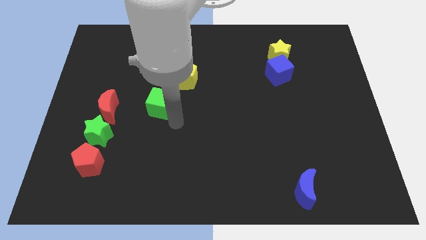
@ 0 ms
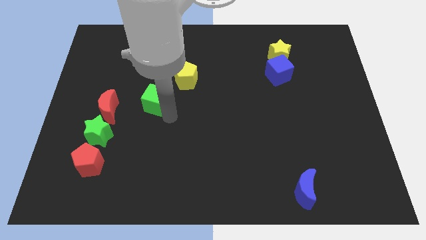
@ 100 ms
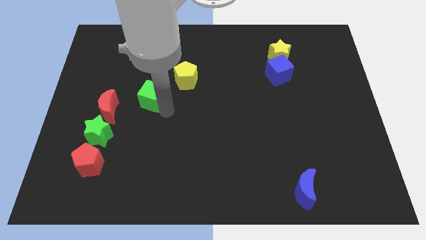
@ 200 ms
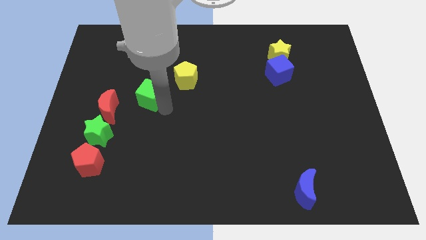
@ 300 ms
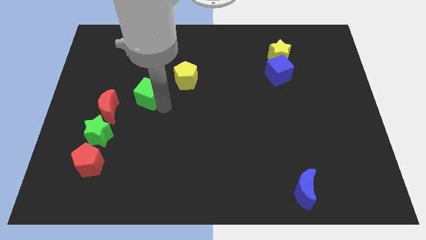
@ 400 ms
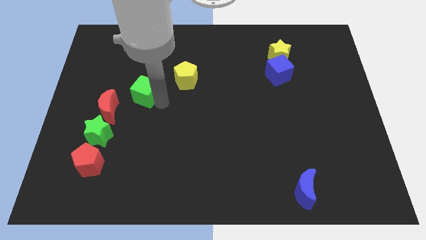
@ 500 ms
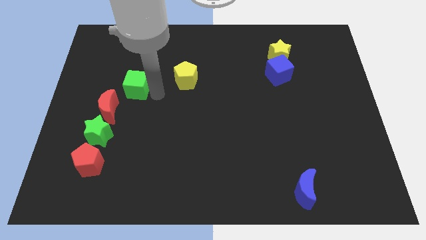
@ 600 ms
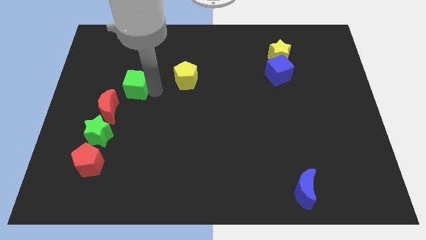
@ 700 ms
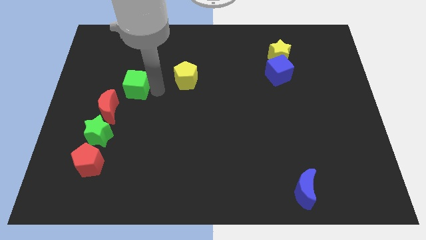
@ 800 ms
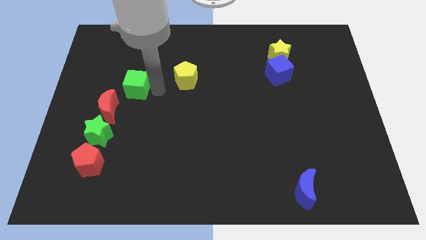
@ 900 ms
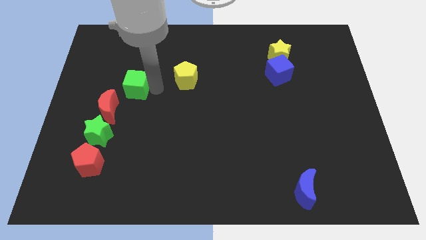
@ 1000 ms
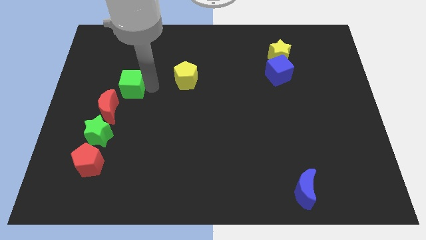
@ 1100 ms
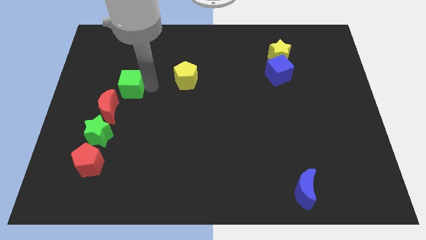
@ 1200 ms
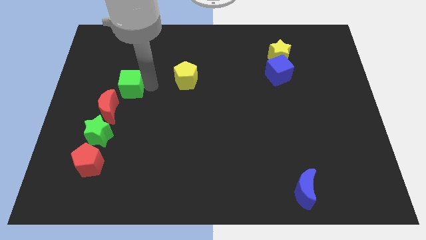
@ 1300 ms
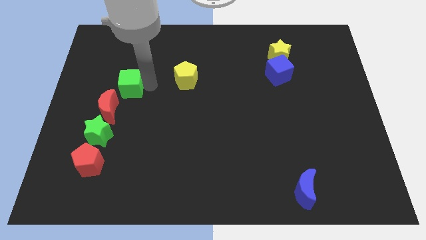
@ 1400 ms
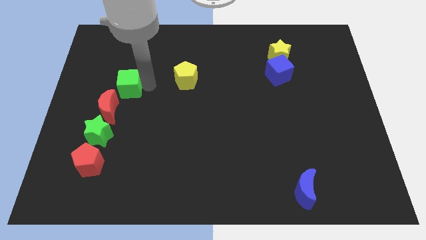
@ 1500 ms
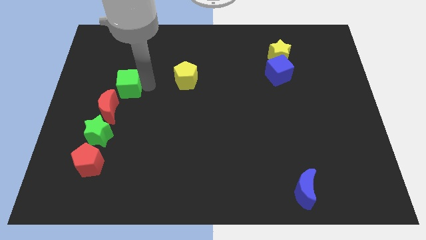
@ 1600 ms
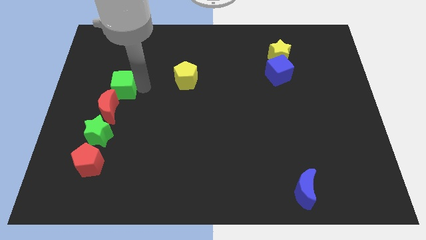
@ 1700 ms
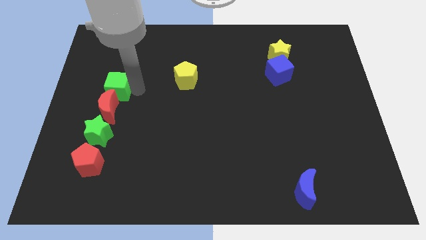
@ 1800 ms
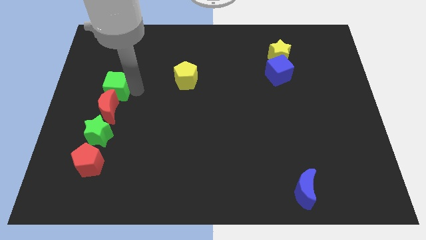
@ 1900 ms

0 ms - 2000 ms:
push the green cube to the top of the red crescent

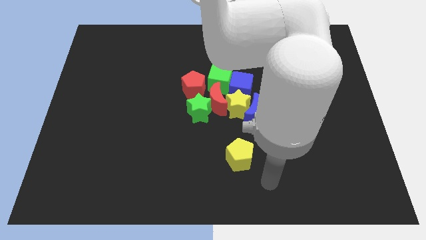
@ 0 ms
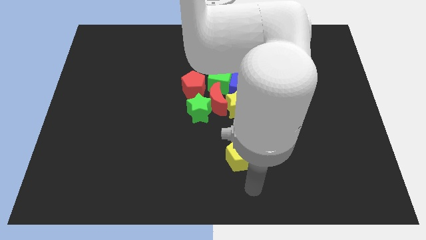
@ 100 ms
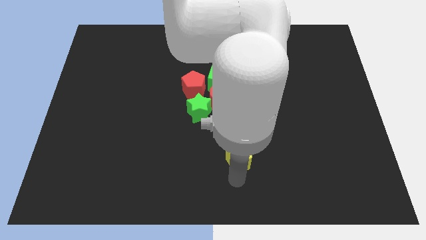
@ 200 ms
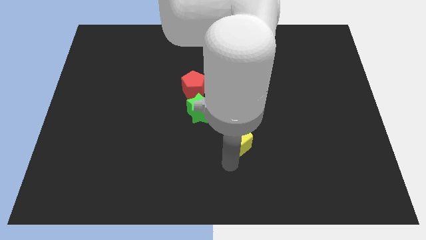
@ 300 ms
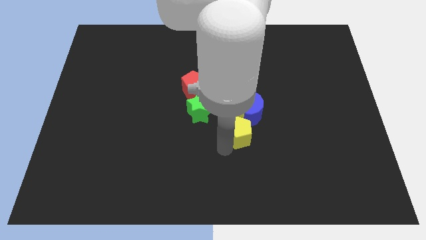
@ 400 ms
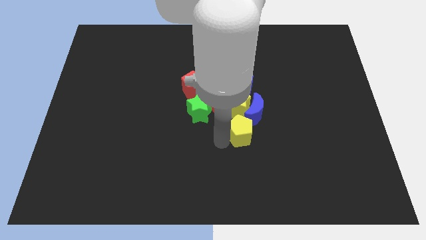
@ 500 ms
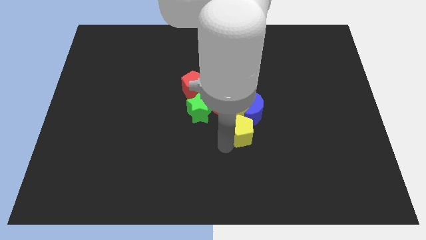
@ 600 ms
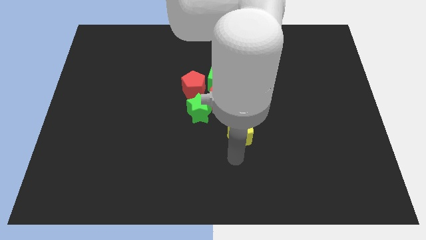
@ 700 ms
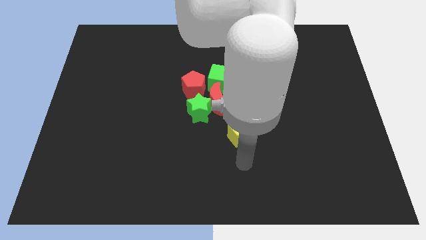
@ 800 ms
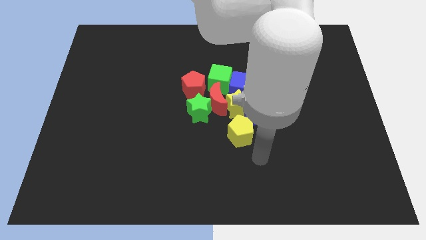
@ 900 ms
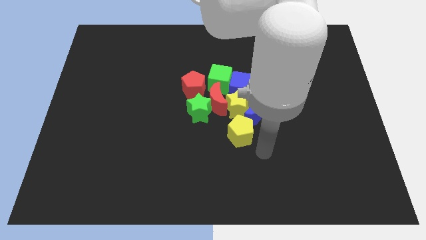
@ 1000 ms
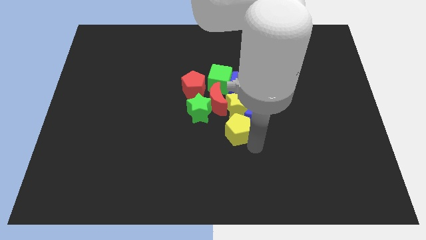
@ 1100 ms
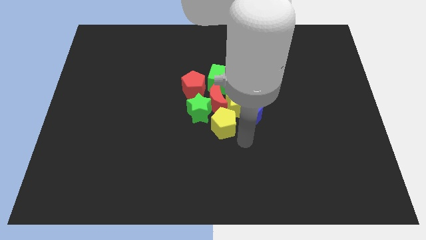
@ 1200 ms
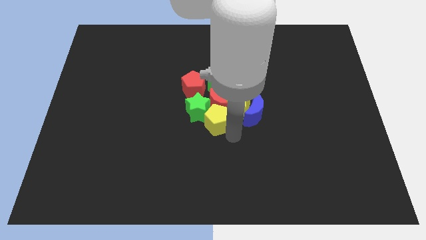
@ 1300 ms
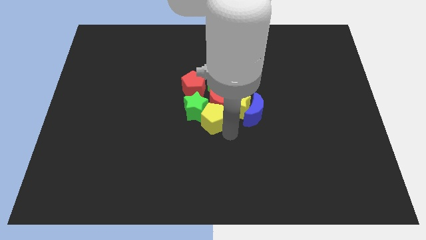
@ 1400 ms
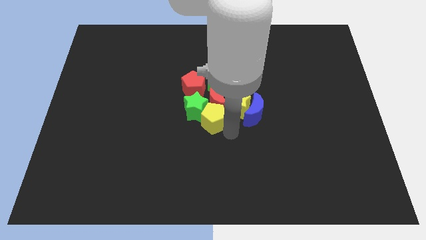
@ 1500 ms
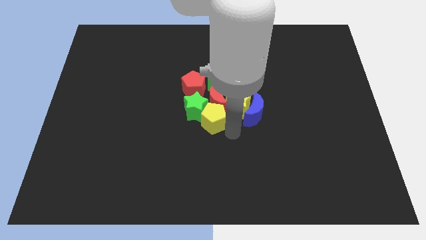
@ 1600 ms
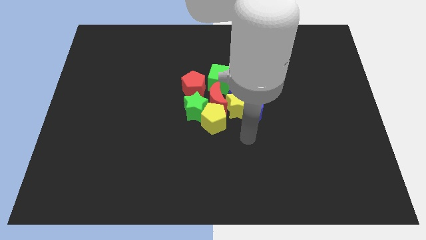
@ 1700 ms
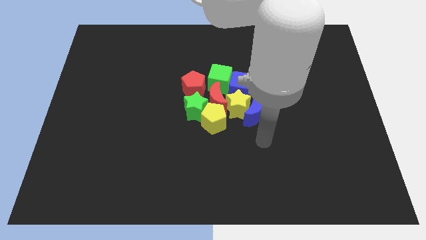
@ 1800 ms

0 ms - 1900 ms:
move yellow pentagon left below the red moon

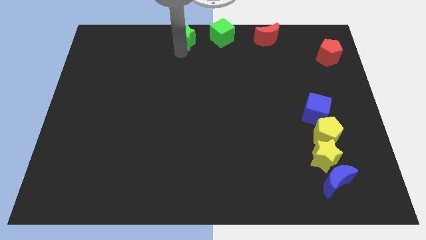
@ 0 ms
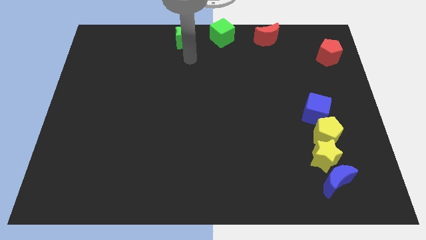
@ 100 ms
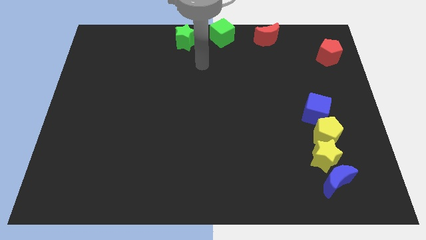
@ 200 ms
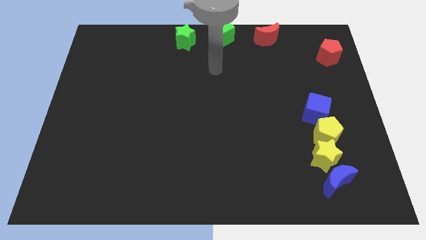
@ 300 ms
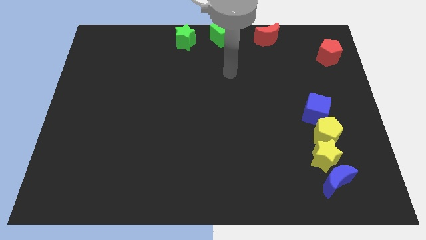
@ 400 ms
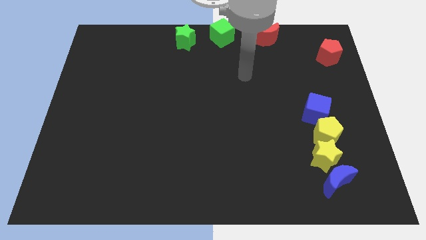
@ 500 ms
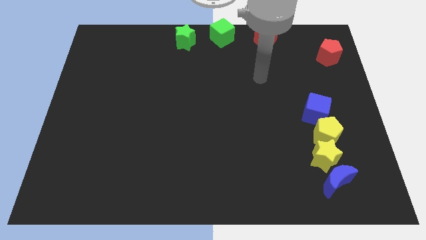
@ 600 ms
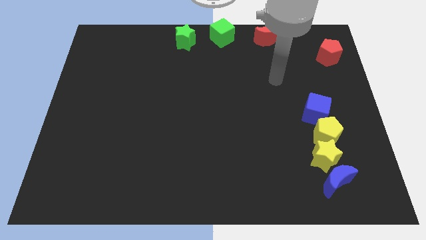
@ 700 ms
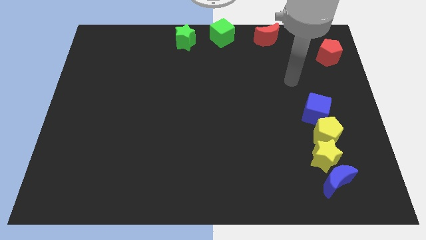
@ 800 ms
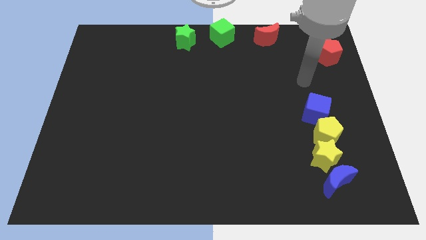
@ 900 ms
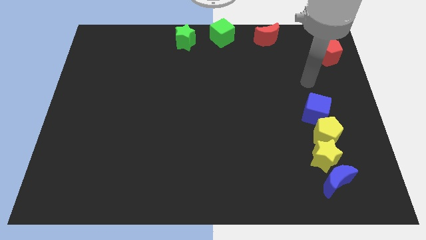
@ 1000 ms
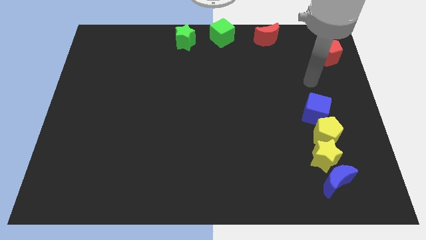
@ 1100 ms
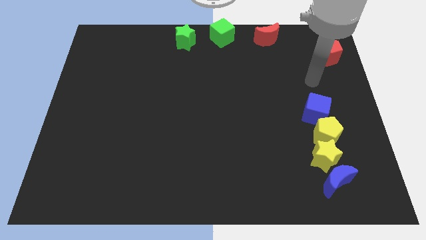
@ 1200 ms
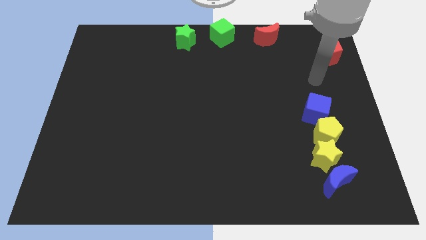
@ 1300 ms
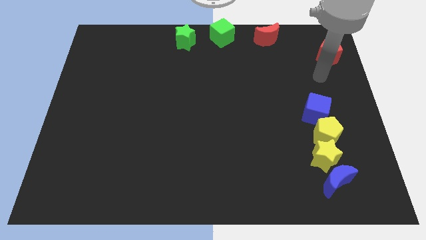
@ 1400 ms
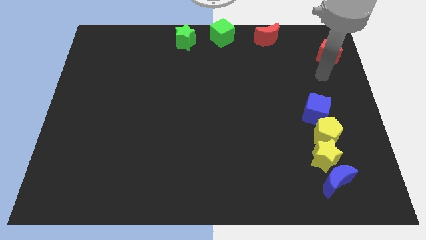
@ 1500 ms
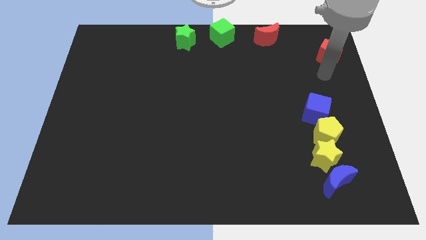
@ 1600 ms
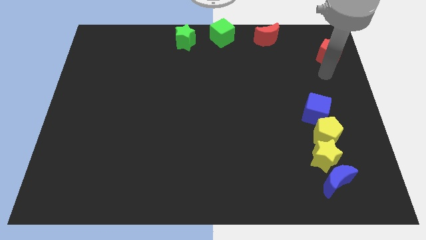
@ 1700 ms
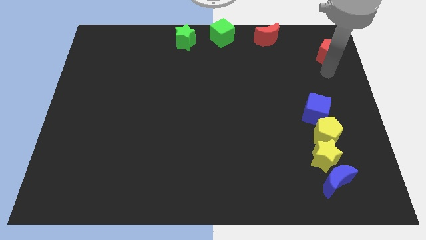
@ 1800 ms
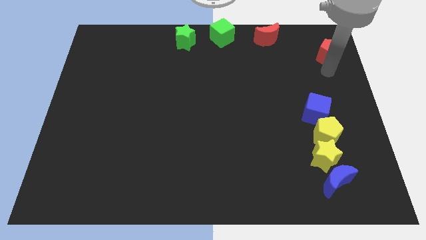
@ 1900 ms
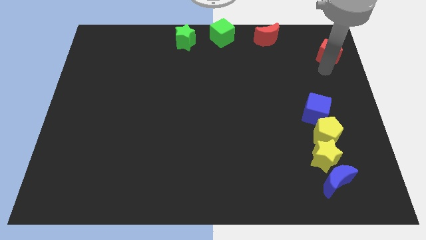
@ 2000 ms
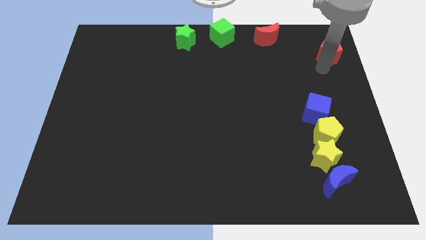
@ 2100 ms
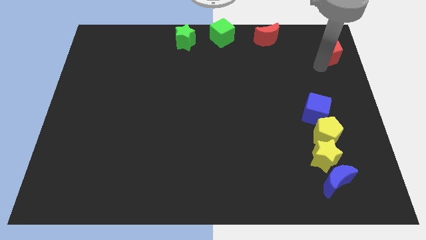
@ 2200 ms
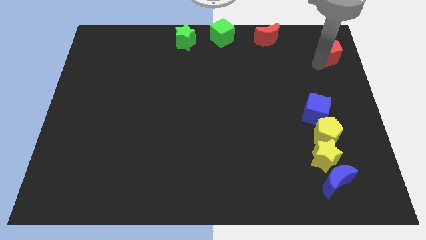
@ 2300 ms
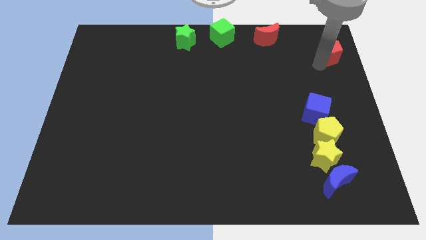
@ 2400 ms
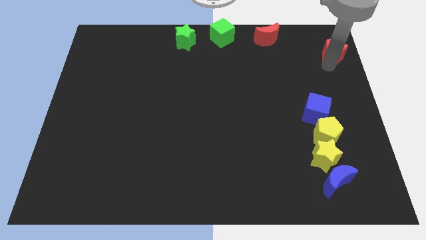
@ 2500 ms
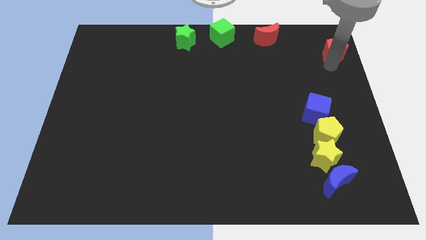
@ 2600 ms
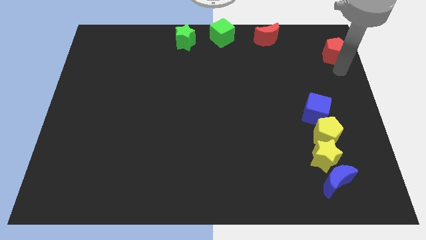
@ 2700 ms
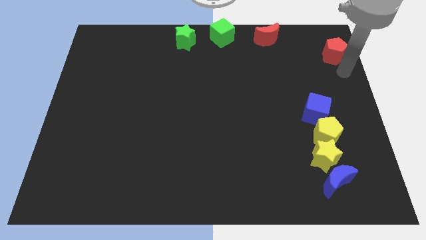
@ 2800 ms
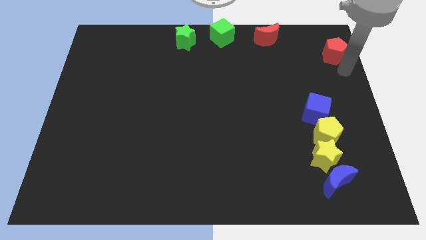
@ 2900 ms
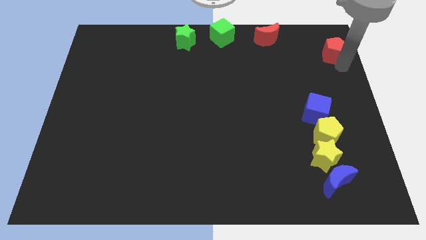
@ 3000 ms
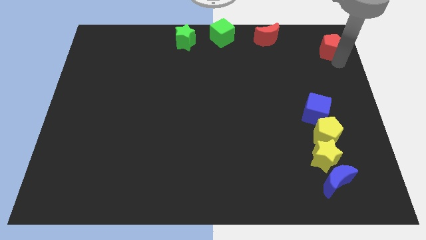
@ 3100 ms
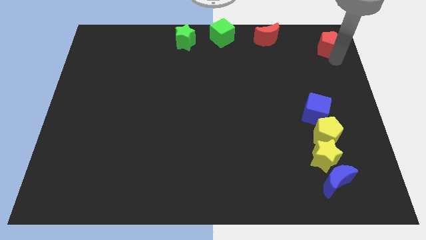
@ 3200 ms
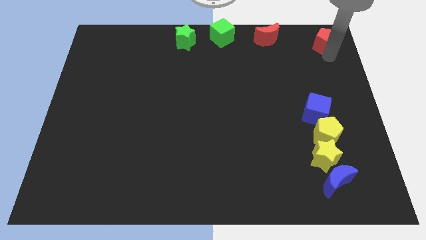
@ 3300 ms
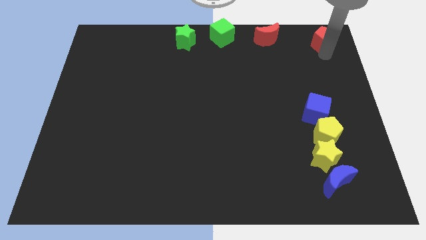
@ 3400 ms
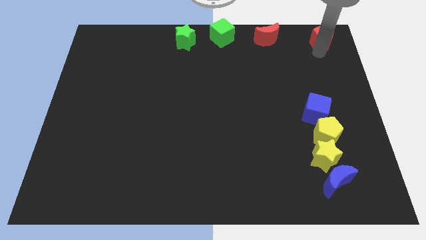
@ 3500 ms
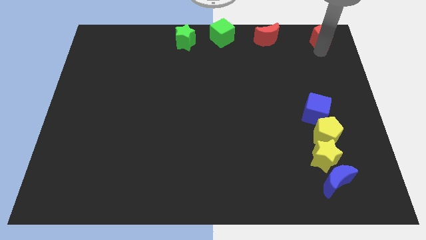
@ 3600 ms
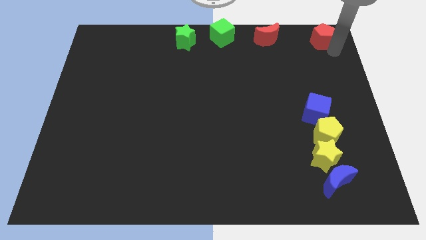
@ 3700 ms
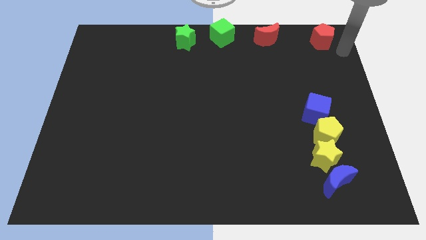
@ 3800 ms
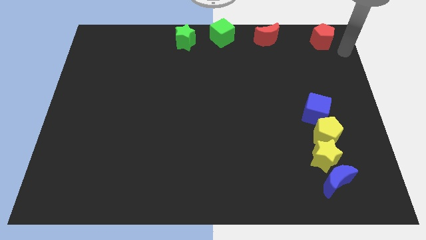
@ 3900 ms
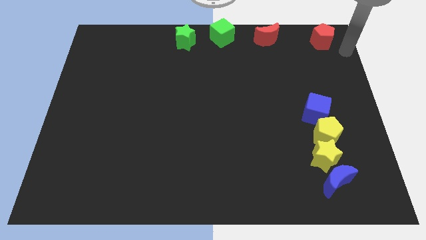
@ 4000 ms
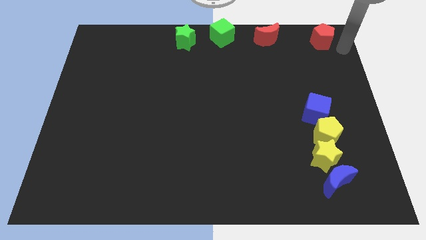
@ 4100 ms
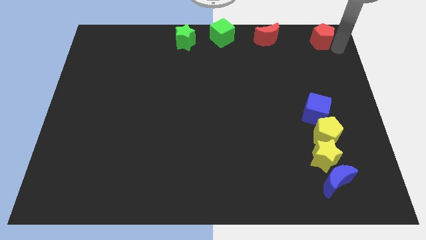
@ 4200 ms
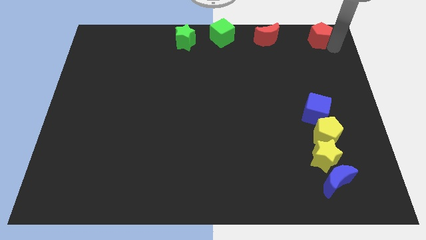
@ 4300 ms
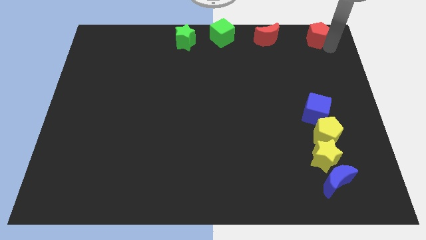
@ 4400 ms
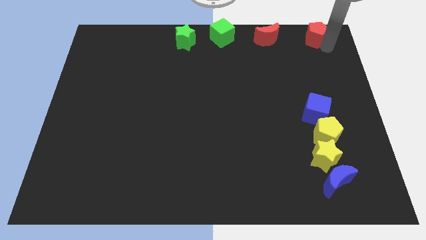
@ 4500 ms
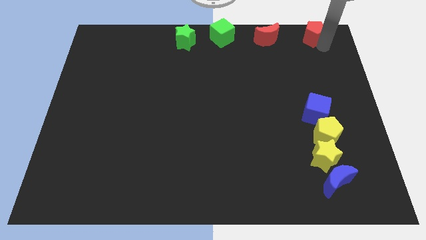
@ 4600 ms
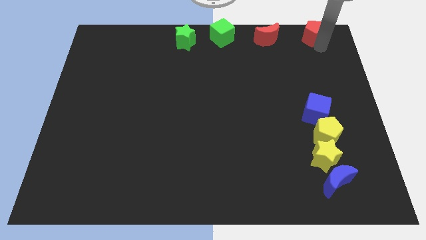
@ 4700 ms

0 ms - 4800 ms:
push the red pentagon to the right of the red crescent

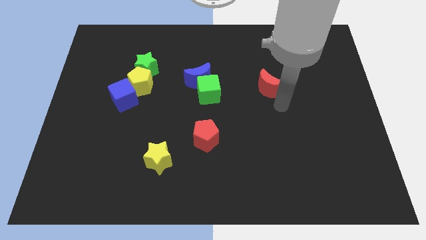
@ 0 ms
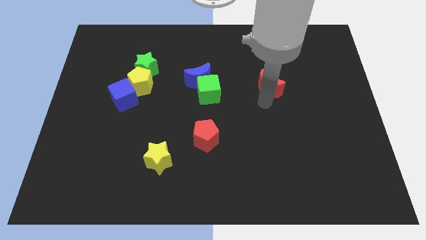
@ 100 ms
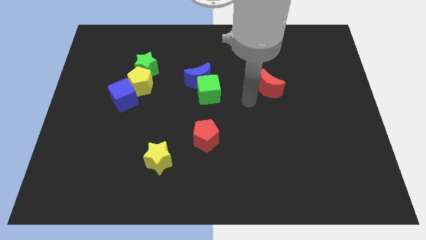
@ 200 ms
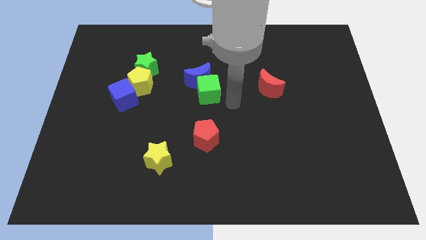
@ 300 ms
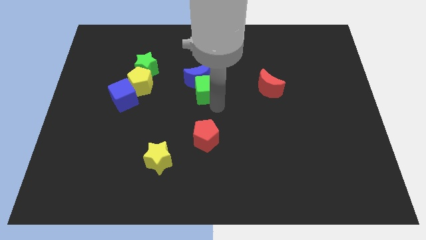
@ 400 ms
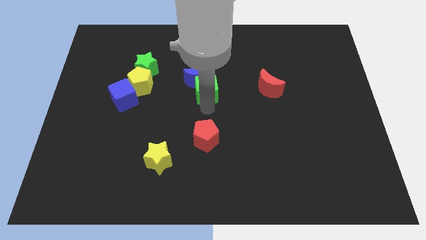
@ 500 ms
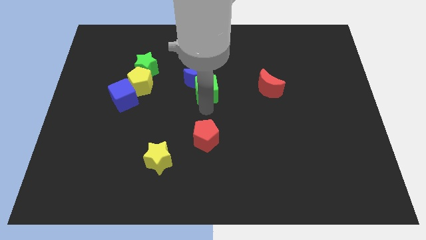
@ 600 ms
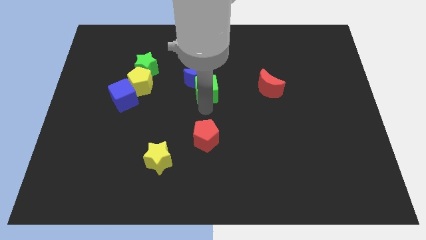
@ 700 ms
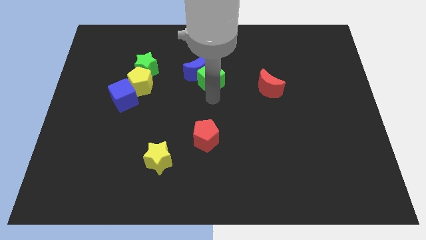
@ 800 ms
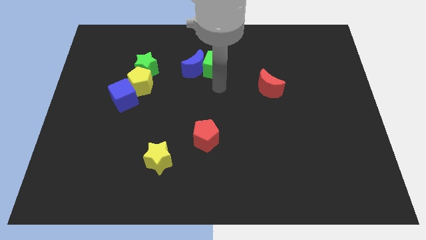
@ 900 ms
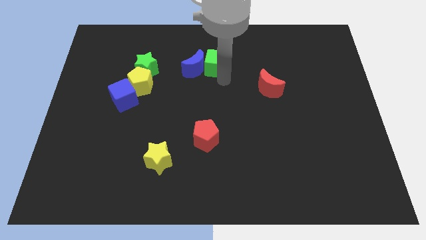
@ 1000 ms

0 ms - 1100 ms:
push the green cube upward
